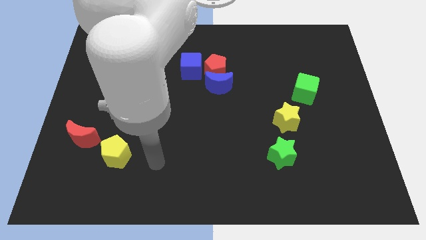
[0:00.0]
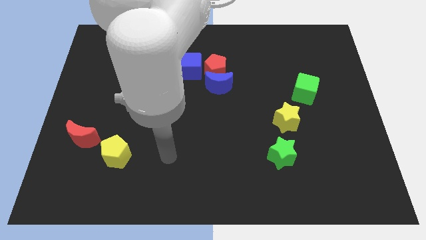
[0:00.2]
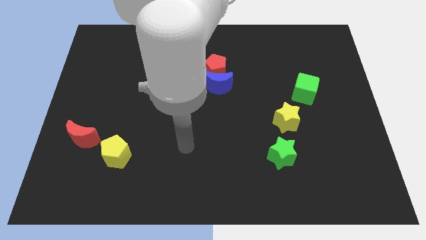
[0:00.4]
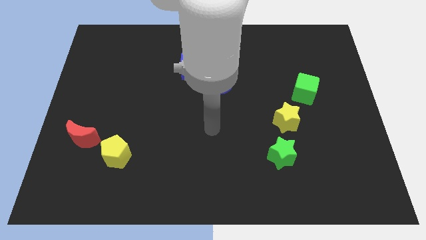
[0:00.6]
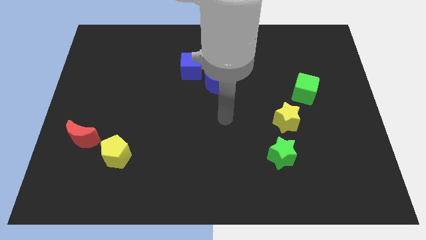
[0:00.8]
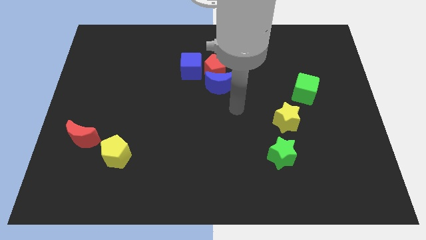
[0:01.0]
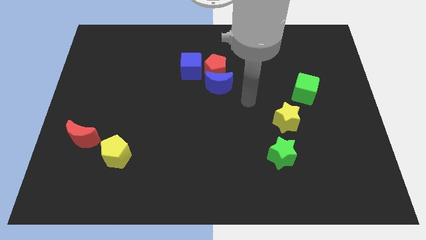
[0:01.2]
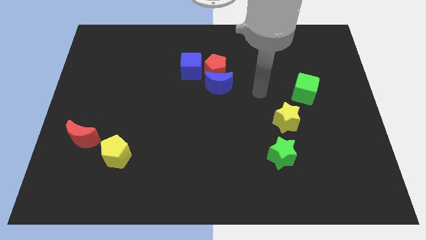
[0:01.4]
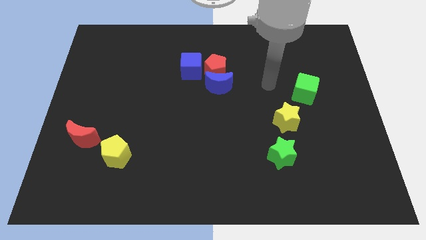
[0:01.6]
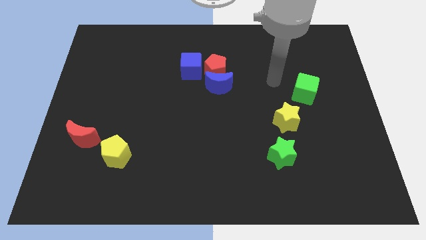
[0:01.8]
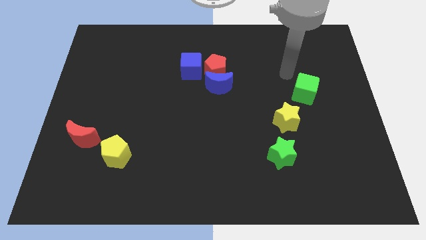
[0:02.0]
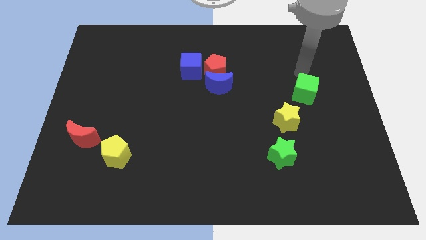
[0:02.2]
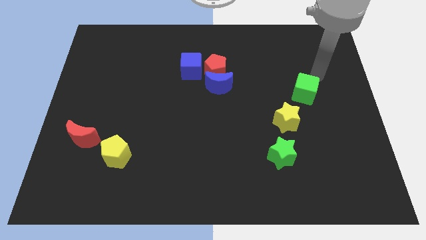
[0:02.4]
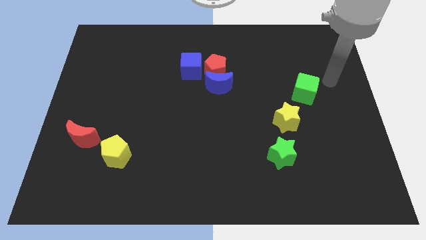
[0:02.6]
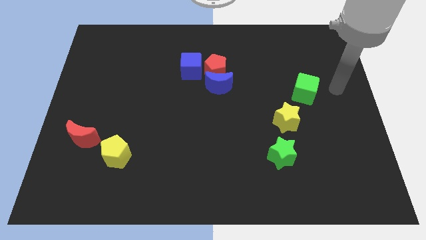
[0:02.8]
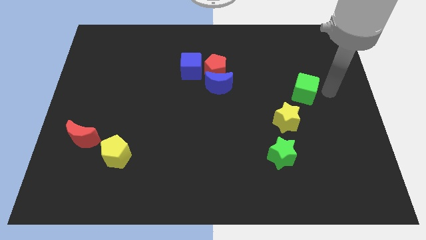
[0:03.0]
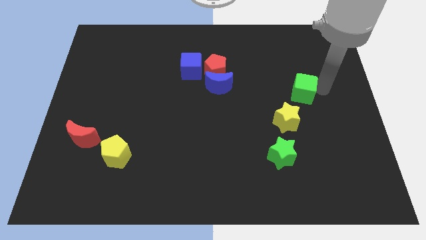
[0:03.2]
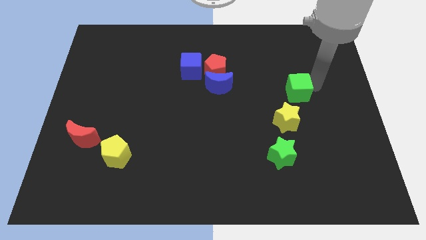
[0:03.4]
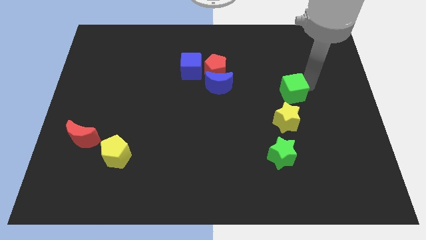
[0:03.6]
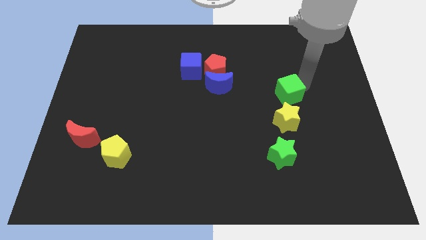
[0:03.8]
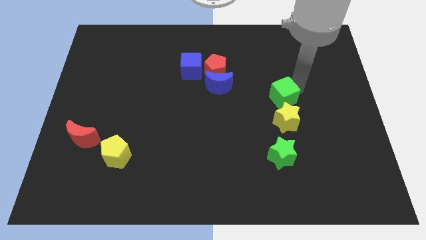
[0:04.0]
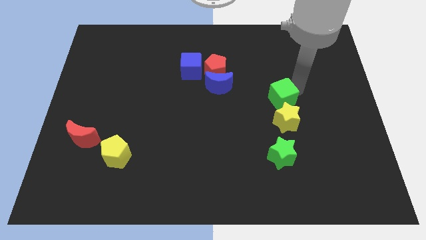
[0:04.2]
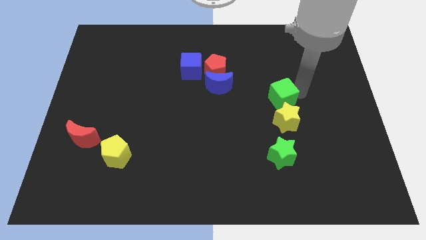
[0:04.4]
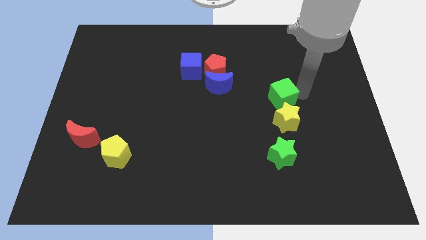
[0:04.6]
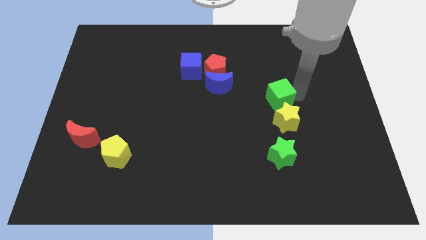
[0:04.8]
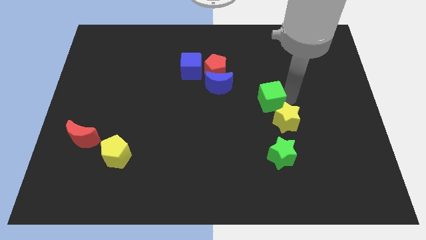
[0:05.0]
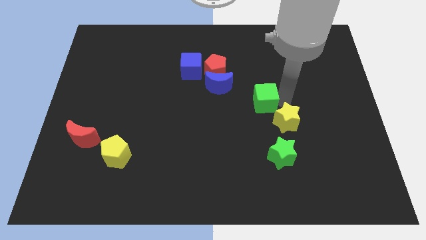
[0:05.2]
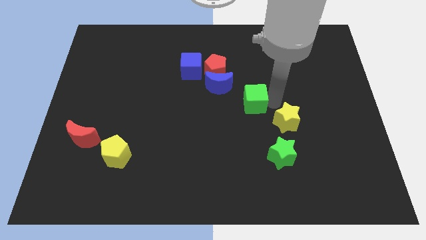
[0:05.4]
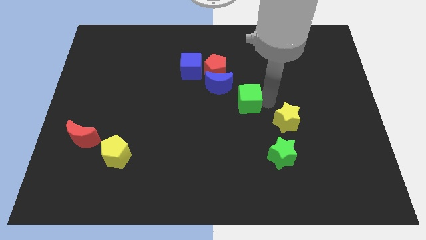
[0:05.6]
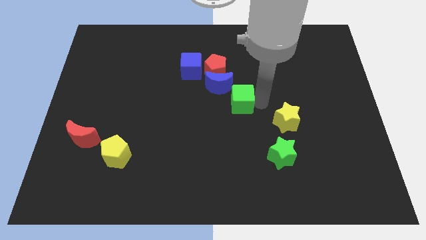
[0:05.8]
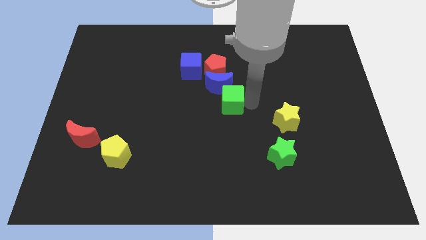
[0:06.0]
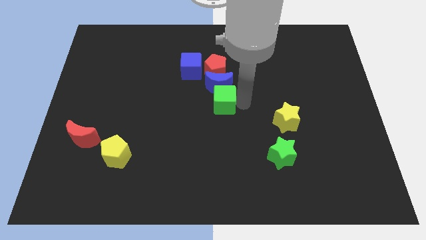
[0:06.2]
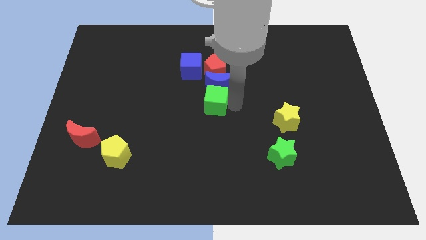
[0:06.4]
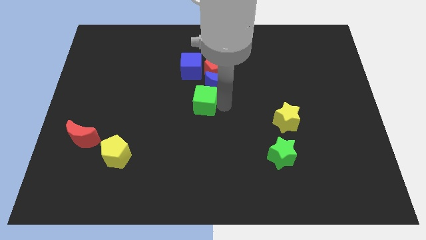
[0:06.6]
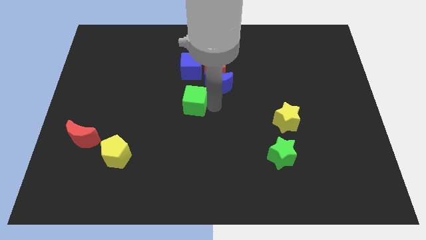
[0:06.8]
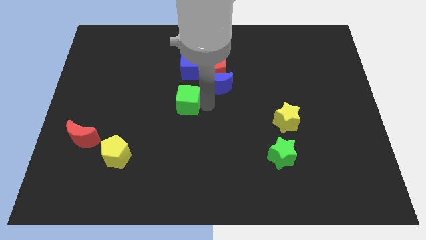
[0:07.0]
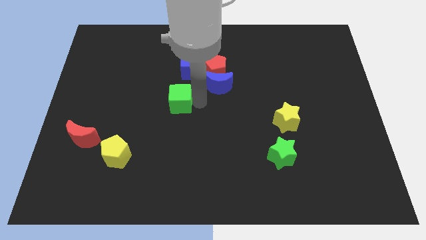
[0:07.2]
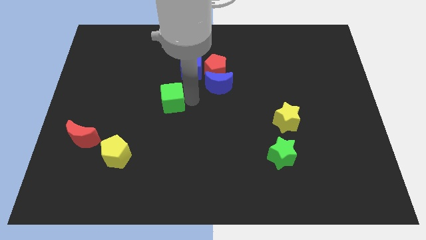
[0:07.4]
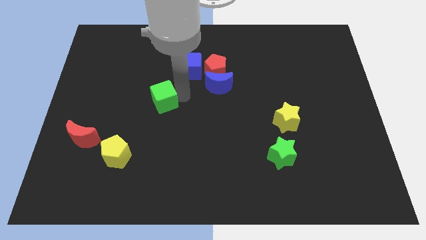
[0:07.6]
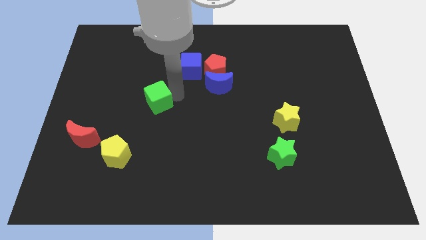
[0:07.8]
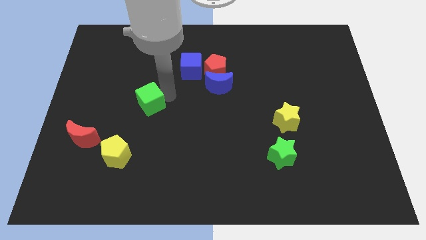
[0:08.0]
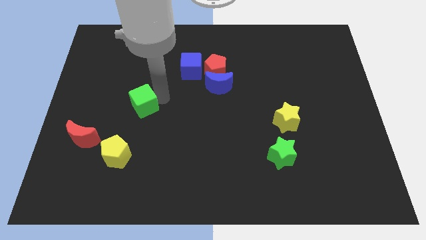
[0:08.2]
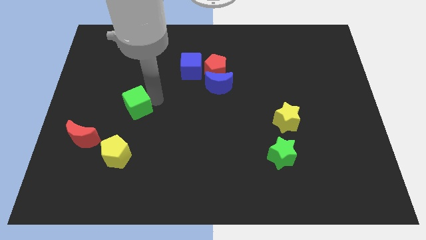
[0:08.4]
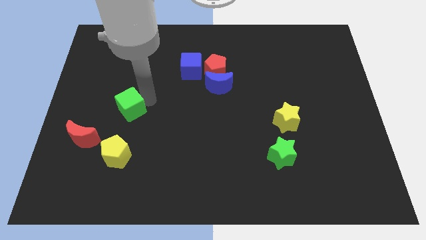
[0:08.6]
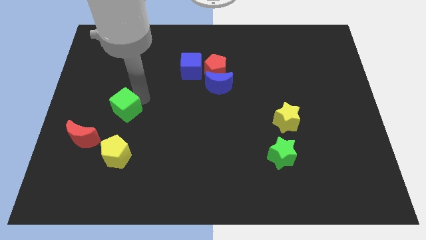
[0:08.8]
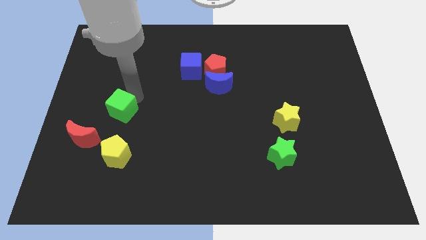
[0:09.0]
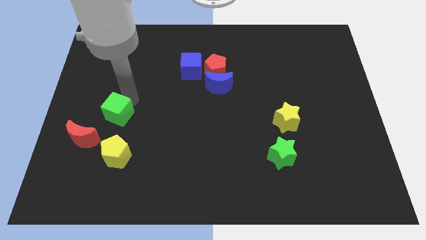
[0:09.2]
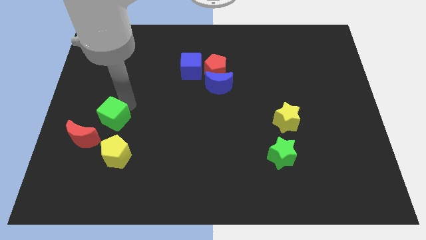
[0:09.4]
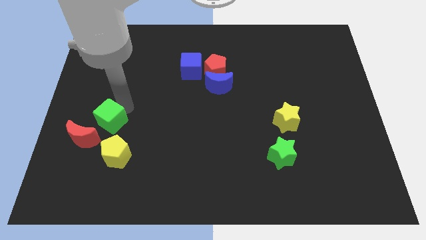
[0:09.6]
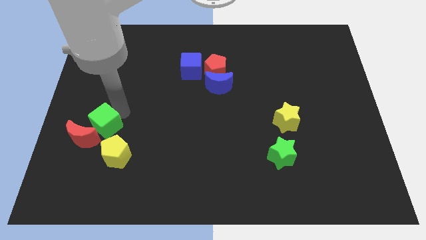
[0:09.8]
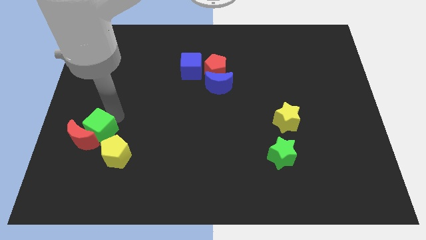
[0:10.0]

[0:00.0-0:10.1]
slide the green cube next to the red moon

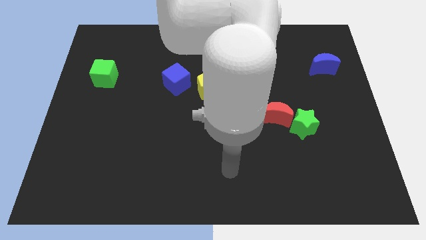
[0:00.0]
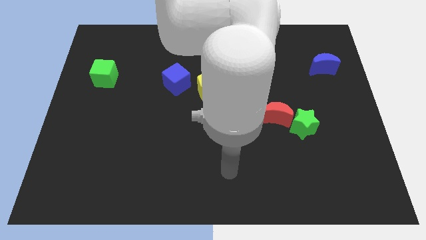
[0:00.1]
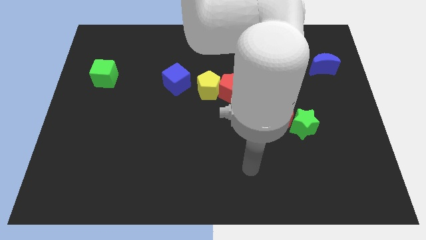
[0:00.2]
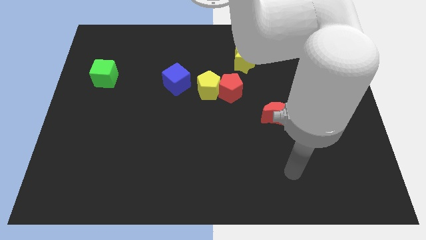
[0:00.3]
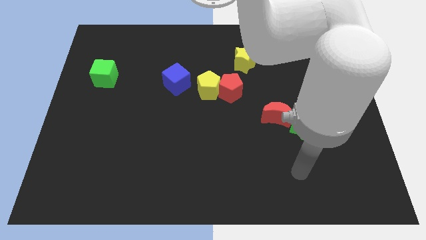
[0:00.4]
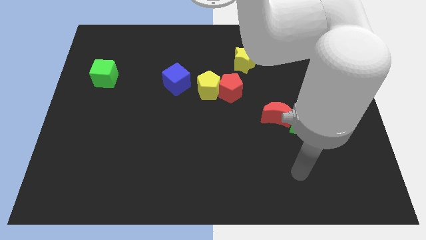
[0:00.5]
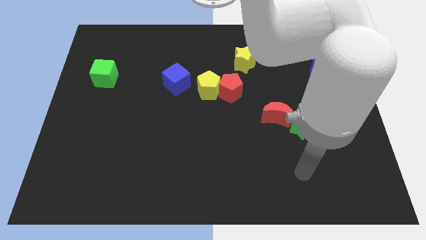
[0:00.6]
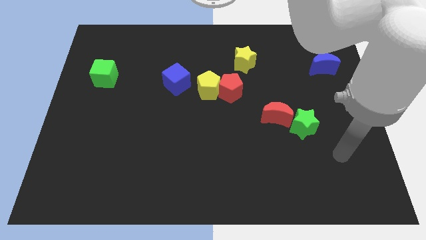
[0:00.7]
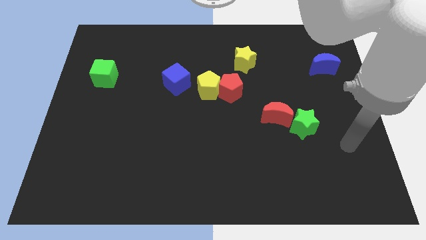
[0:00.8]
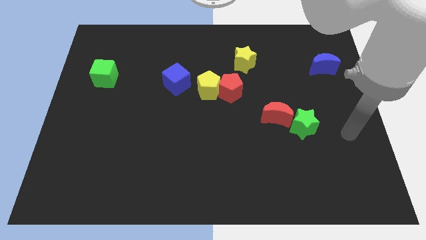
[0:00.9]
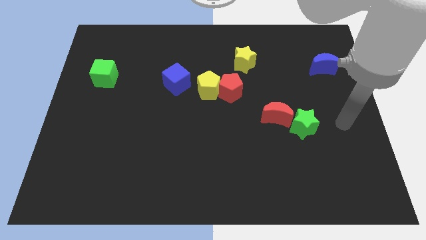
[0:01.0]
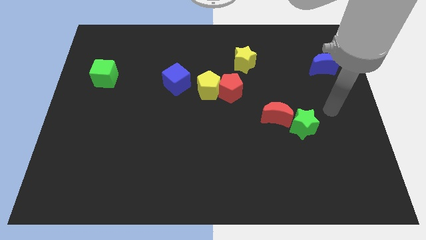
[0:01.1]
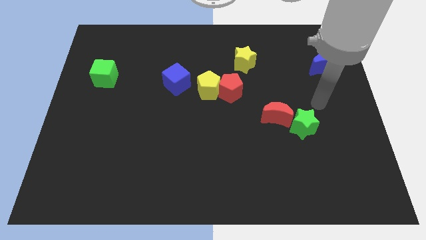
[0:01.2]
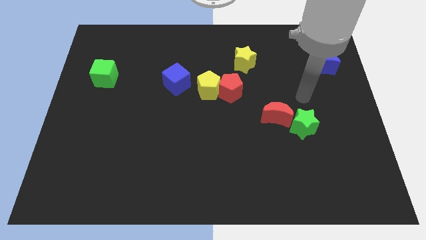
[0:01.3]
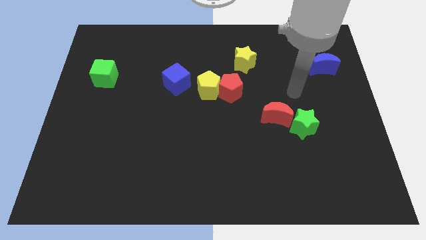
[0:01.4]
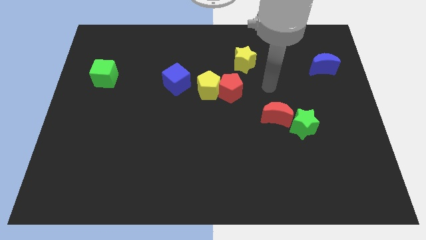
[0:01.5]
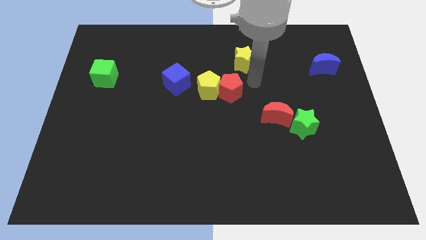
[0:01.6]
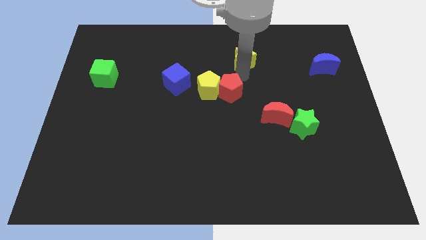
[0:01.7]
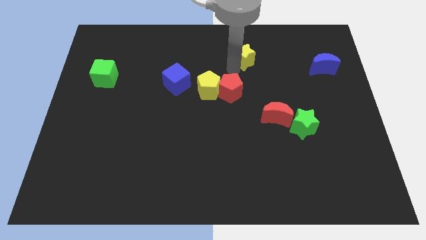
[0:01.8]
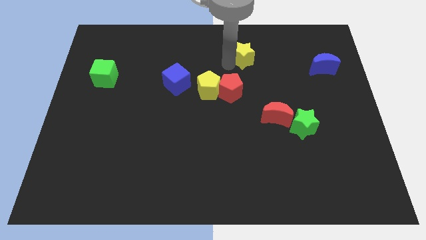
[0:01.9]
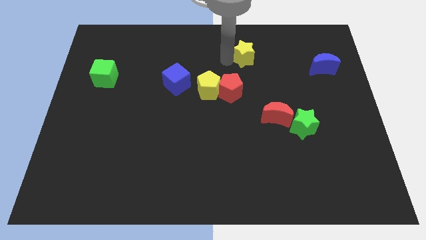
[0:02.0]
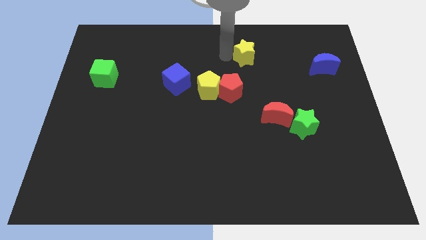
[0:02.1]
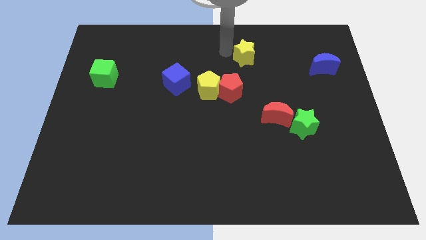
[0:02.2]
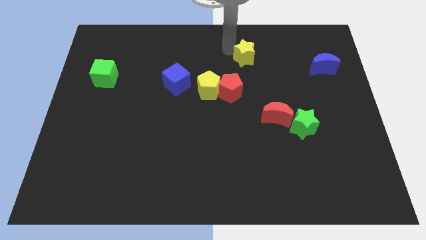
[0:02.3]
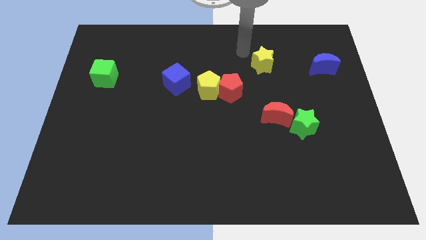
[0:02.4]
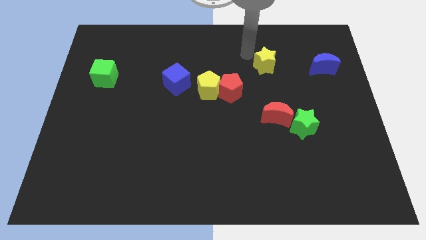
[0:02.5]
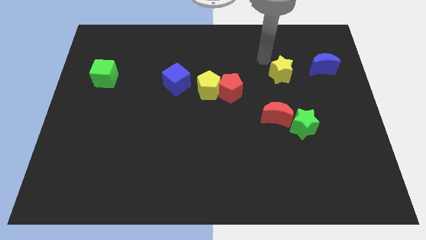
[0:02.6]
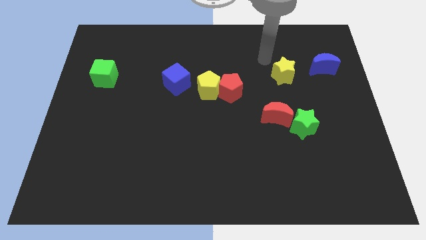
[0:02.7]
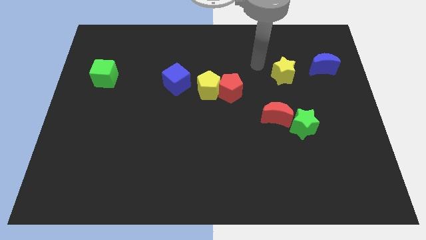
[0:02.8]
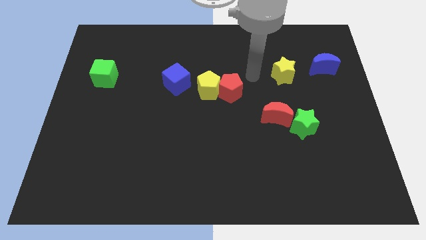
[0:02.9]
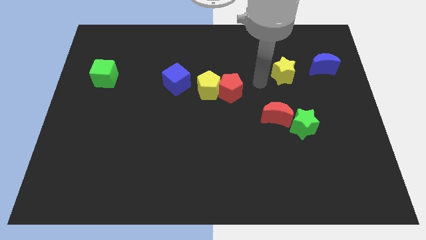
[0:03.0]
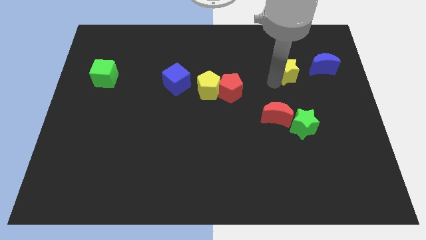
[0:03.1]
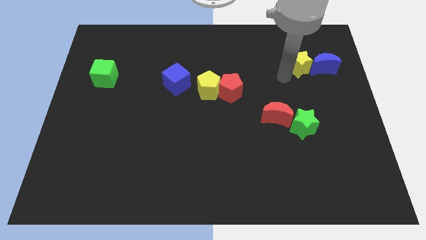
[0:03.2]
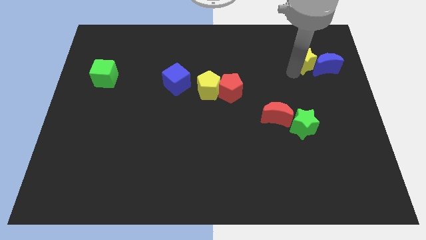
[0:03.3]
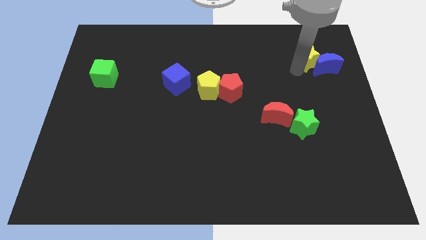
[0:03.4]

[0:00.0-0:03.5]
push the yellow star towards the blue moon

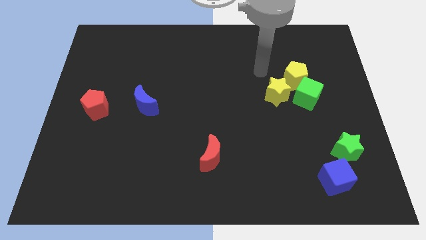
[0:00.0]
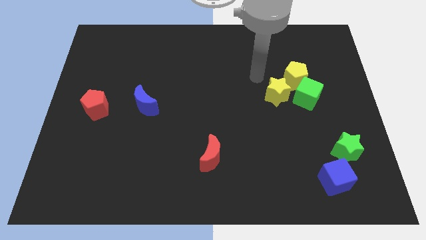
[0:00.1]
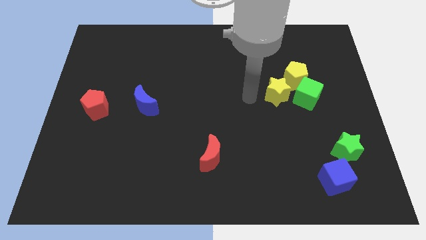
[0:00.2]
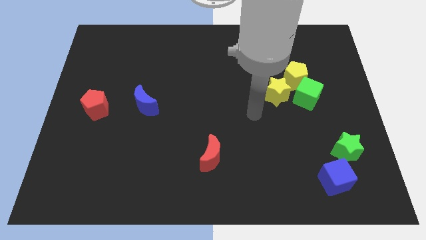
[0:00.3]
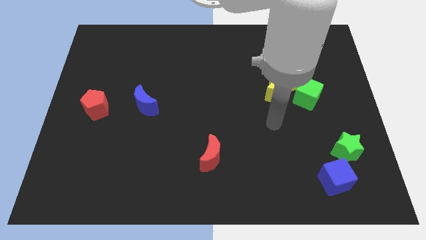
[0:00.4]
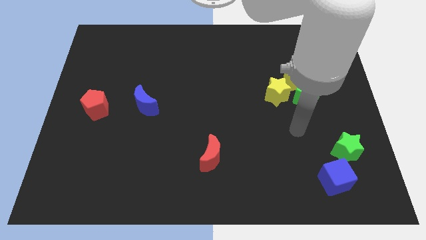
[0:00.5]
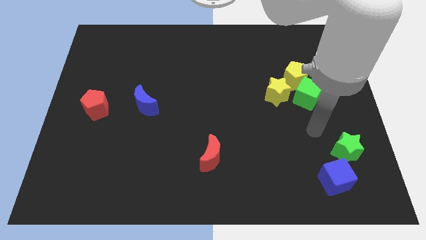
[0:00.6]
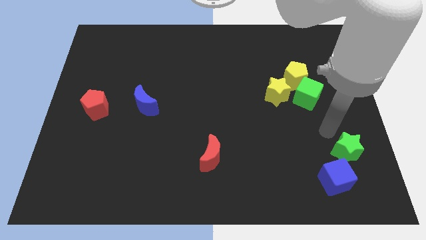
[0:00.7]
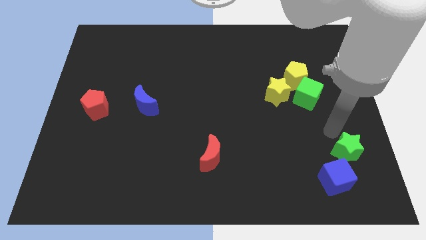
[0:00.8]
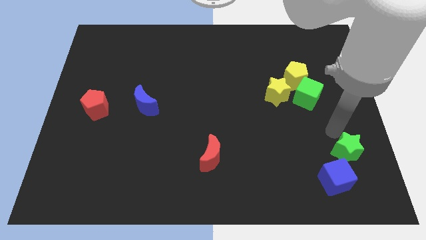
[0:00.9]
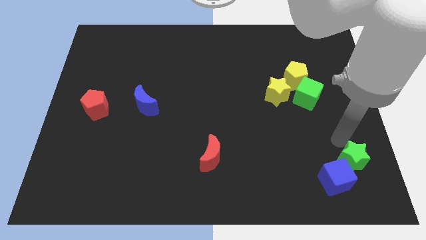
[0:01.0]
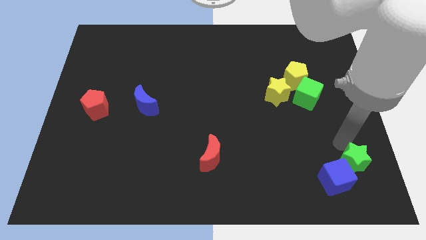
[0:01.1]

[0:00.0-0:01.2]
slide the green star to the blue cube
